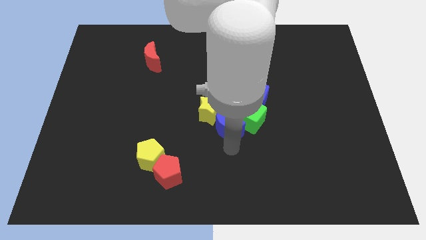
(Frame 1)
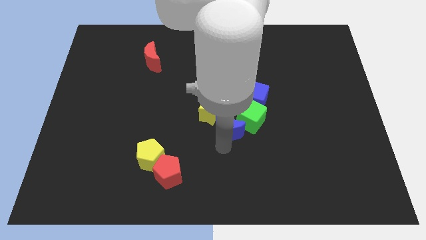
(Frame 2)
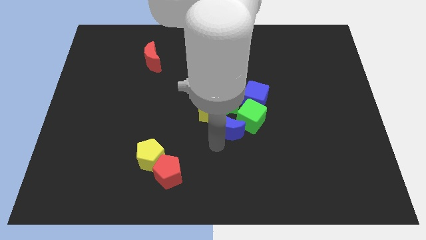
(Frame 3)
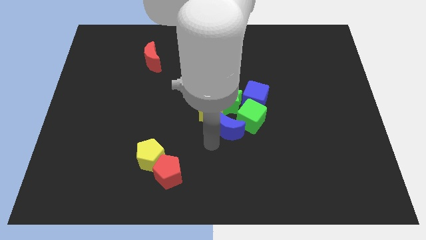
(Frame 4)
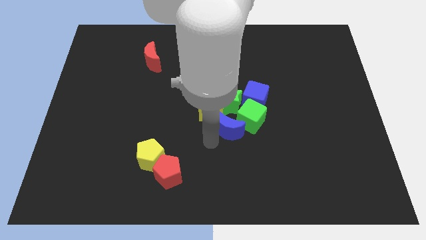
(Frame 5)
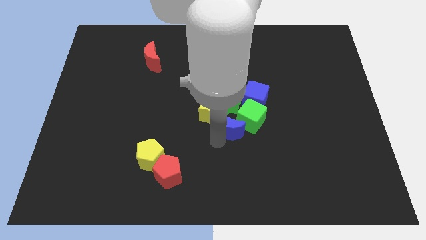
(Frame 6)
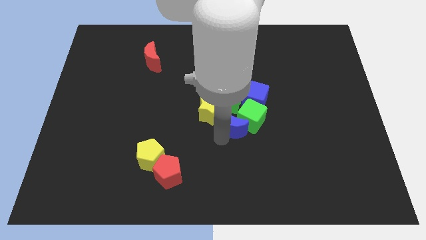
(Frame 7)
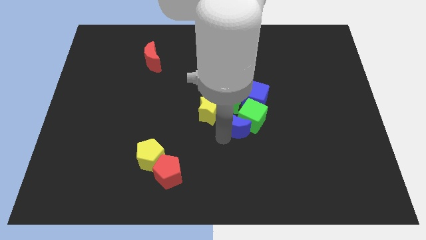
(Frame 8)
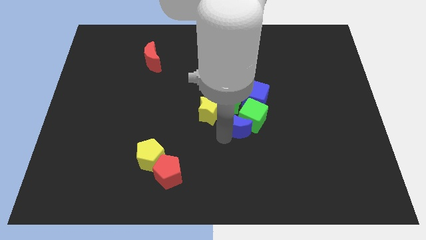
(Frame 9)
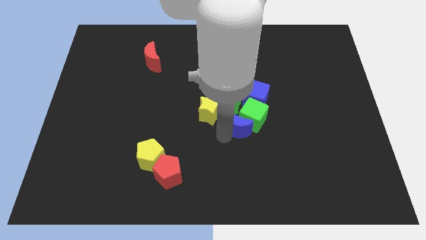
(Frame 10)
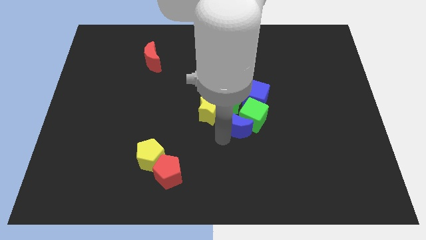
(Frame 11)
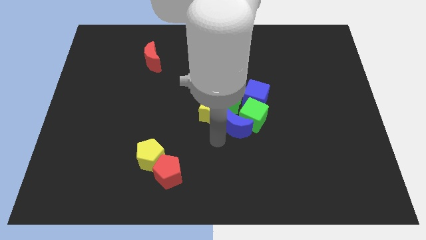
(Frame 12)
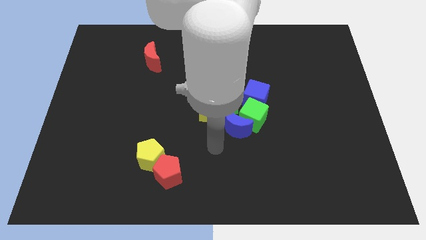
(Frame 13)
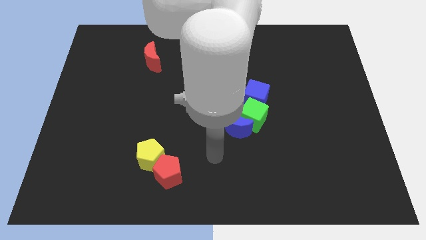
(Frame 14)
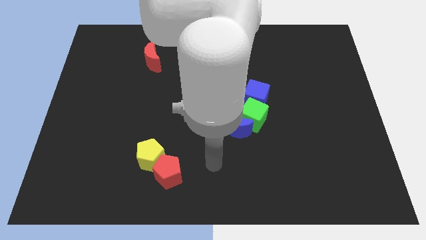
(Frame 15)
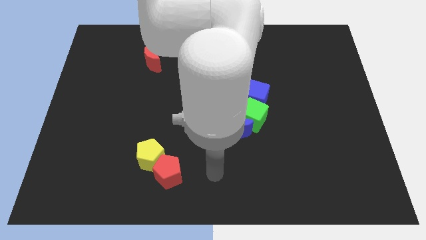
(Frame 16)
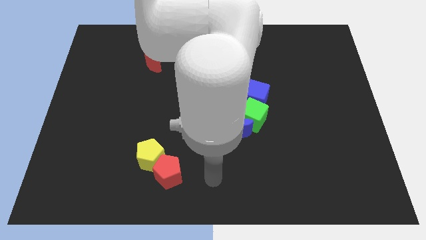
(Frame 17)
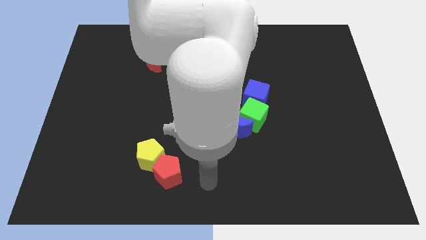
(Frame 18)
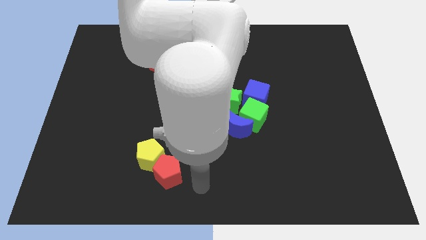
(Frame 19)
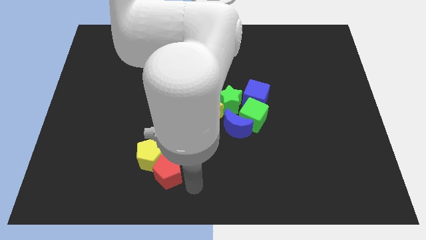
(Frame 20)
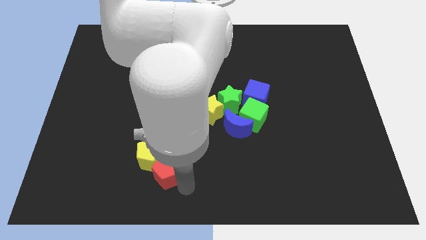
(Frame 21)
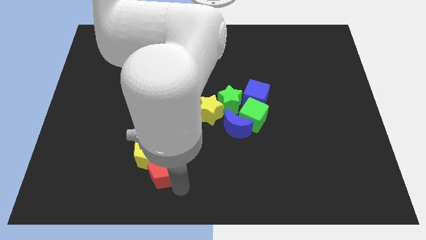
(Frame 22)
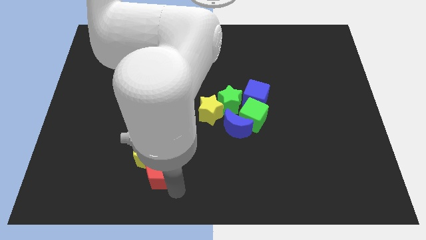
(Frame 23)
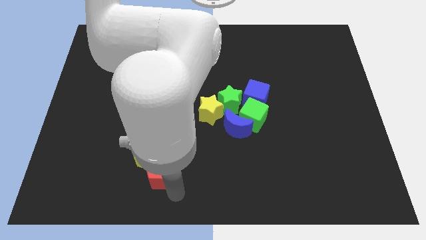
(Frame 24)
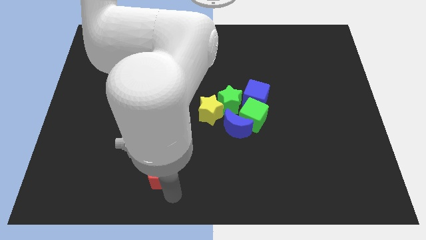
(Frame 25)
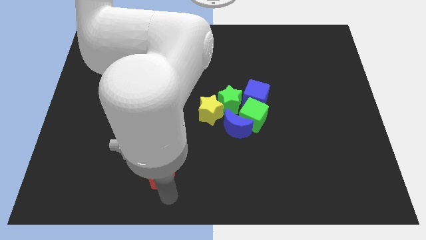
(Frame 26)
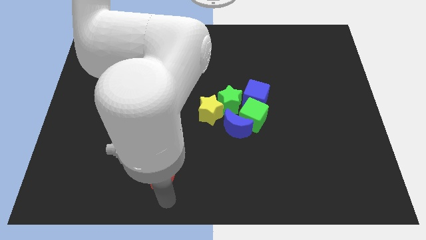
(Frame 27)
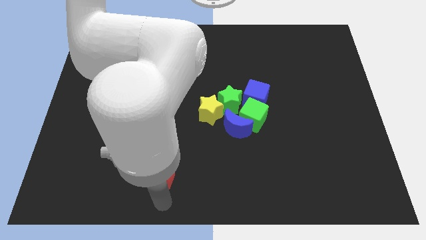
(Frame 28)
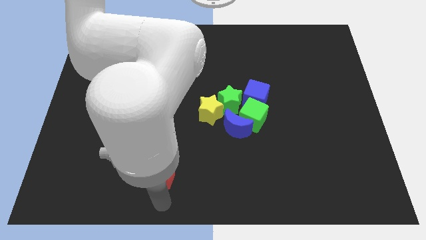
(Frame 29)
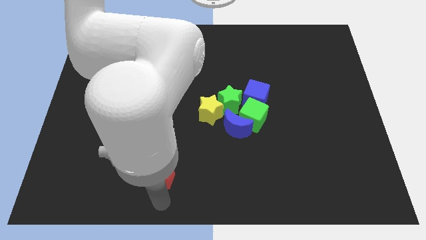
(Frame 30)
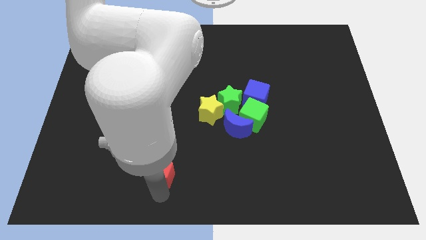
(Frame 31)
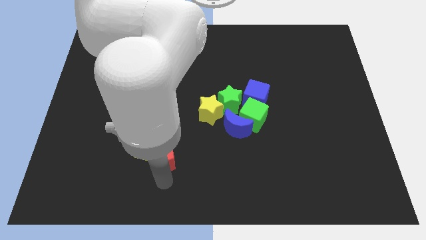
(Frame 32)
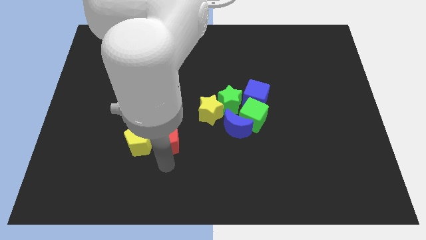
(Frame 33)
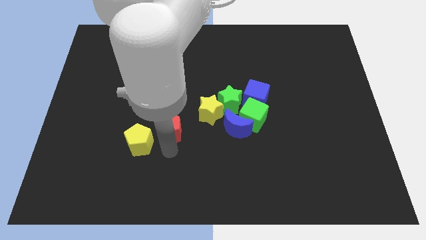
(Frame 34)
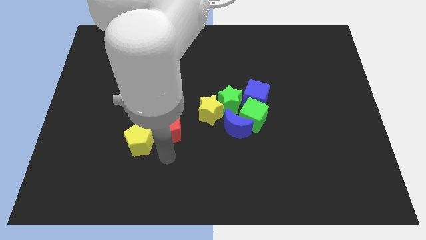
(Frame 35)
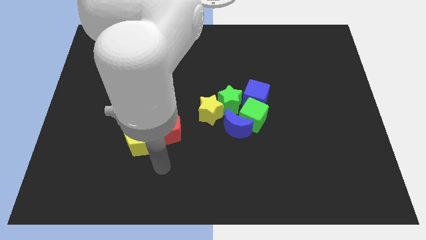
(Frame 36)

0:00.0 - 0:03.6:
separate the red pentagon from the yellow pentagon

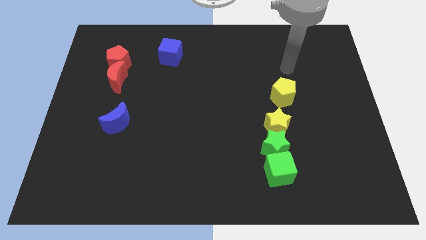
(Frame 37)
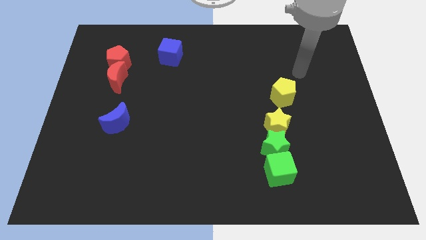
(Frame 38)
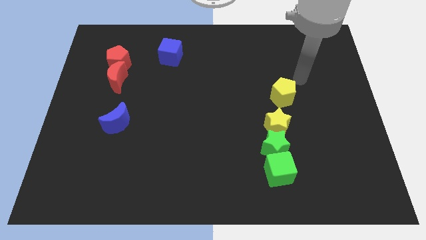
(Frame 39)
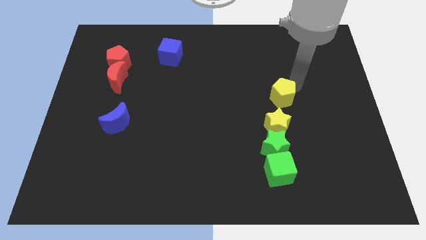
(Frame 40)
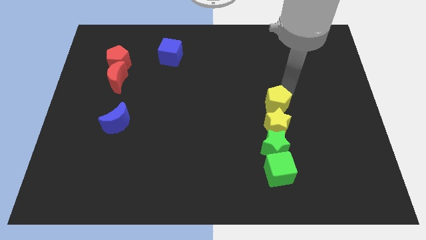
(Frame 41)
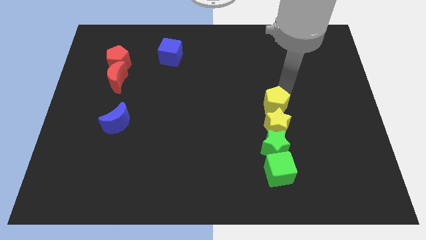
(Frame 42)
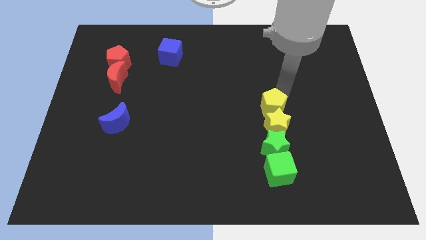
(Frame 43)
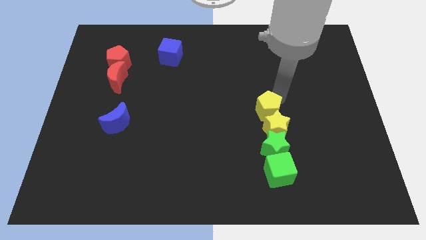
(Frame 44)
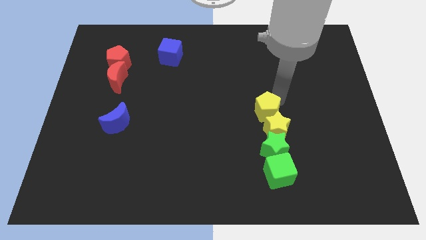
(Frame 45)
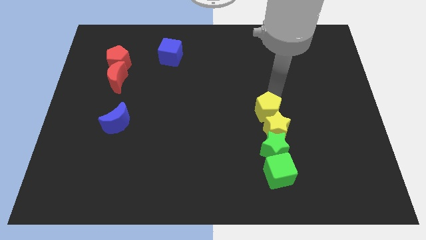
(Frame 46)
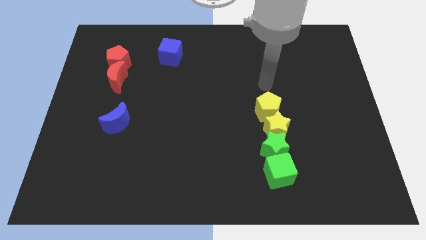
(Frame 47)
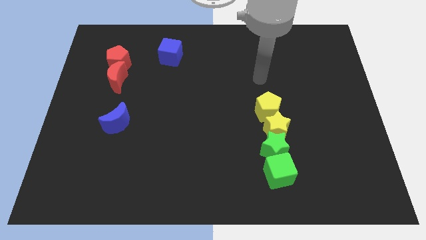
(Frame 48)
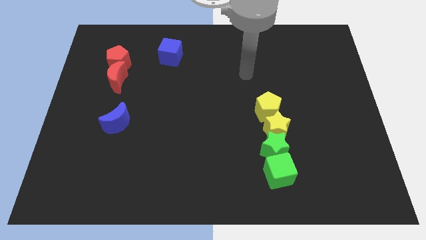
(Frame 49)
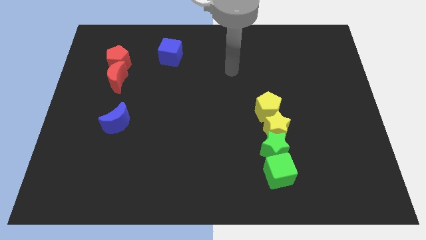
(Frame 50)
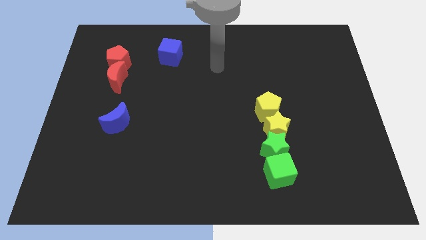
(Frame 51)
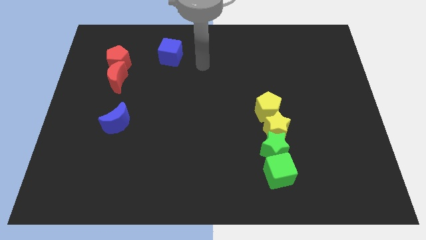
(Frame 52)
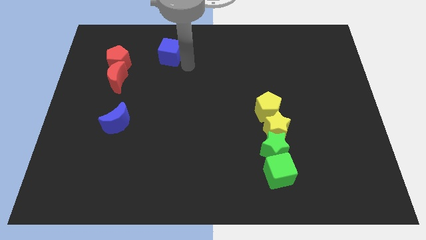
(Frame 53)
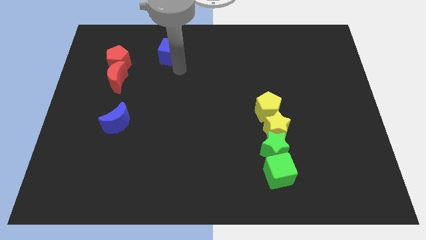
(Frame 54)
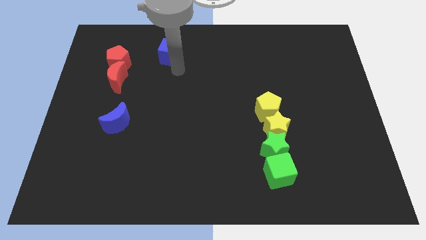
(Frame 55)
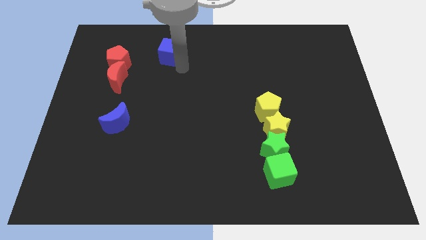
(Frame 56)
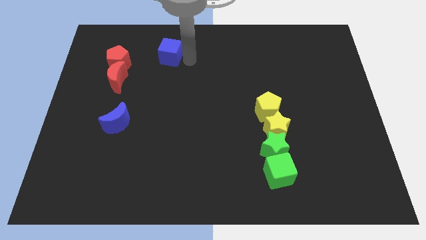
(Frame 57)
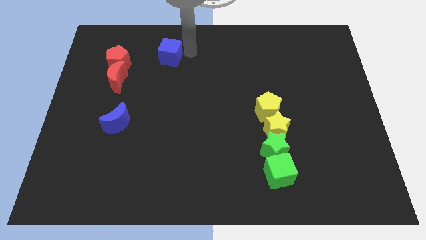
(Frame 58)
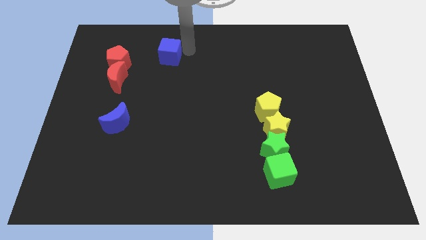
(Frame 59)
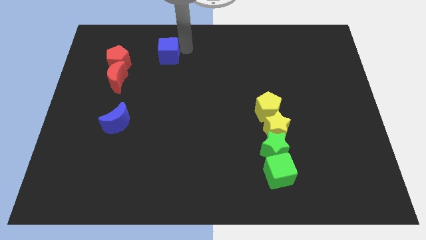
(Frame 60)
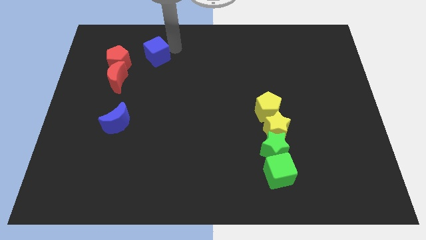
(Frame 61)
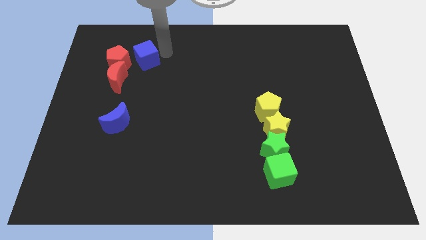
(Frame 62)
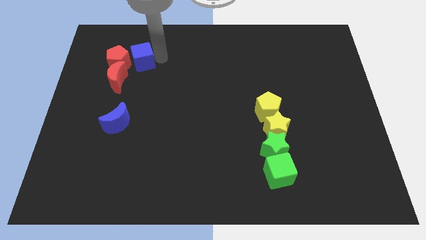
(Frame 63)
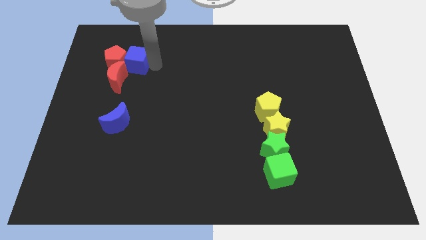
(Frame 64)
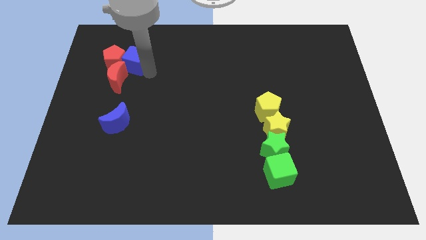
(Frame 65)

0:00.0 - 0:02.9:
place the blue cube right to the red pentagon

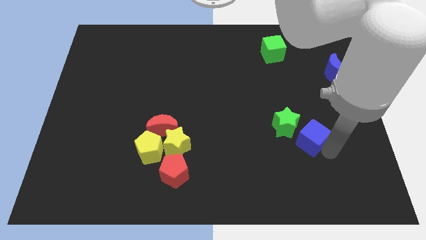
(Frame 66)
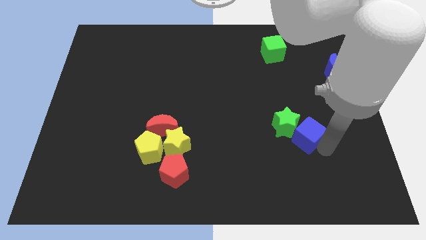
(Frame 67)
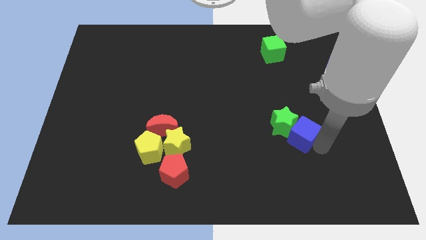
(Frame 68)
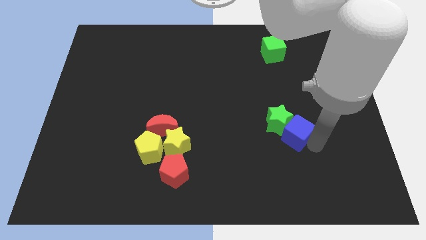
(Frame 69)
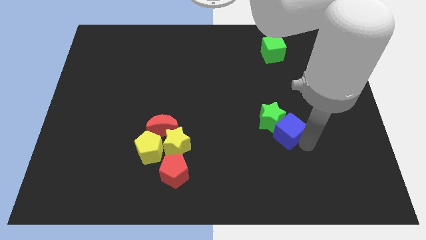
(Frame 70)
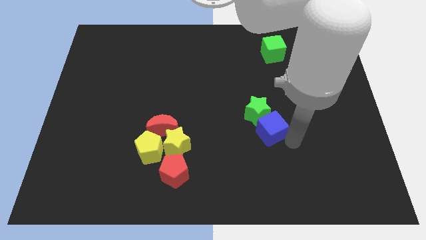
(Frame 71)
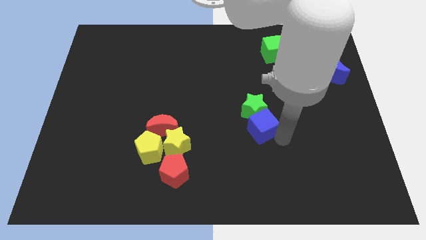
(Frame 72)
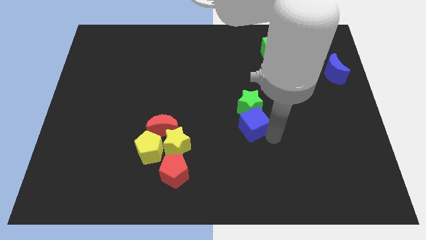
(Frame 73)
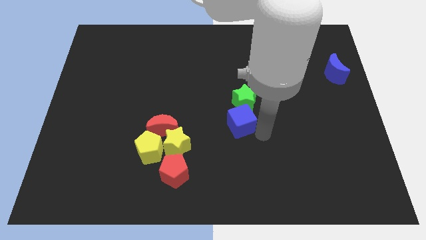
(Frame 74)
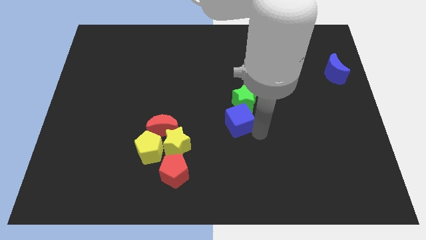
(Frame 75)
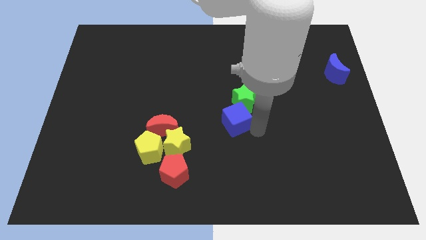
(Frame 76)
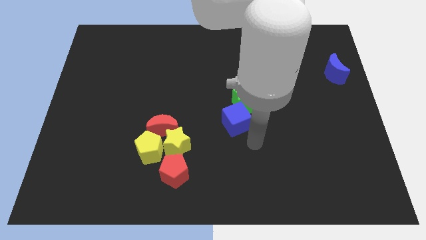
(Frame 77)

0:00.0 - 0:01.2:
push green star with blue cube

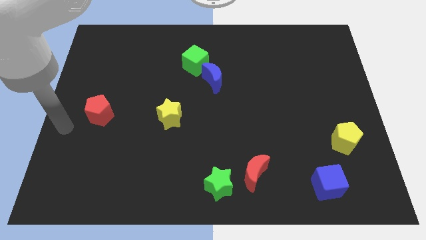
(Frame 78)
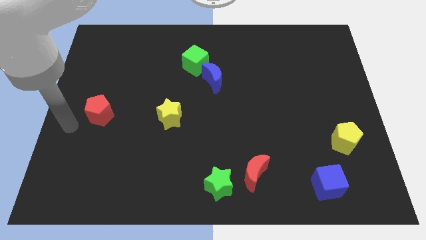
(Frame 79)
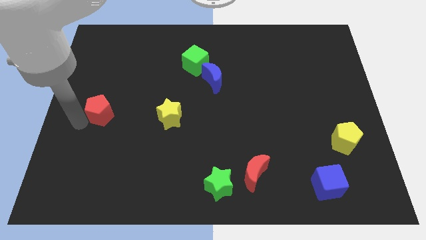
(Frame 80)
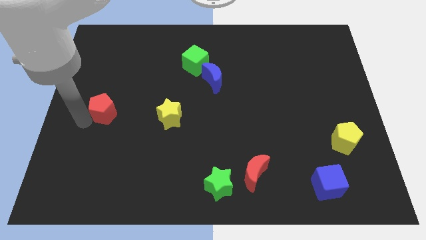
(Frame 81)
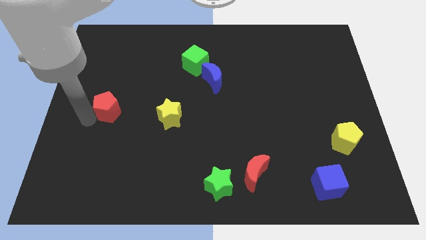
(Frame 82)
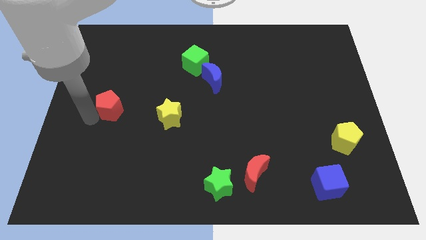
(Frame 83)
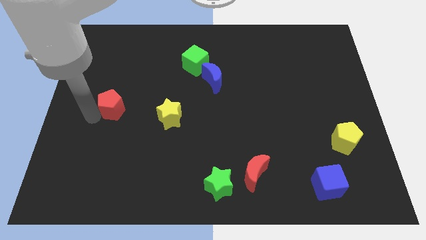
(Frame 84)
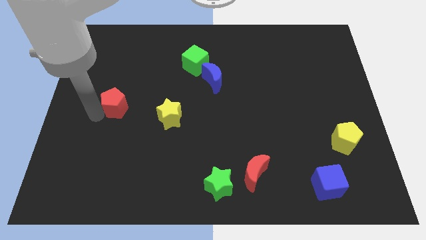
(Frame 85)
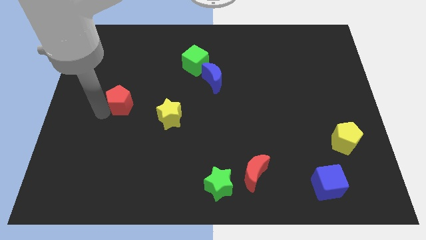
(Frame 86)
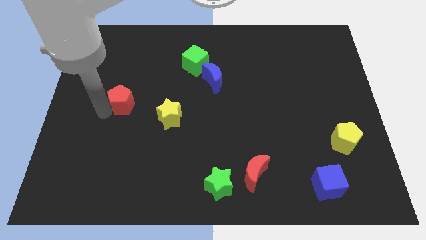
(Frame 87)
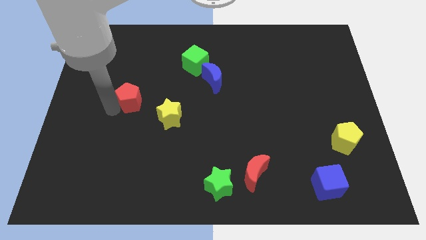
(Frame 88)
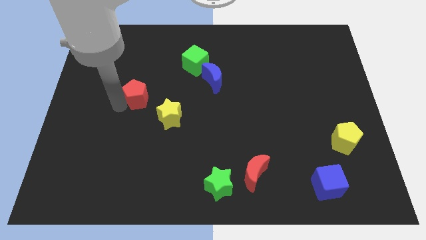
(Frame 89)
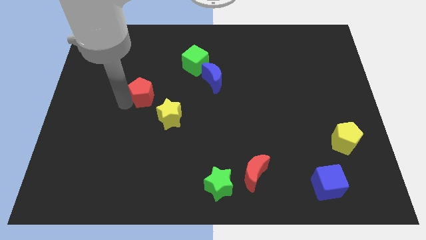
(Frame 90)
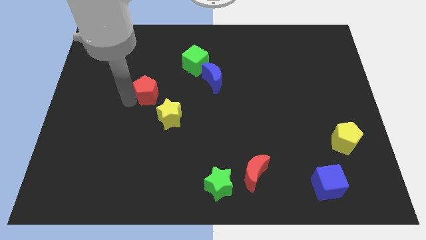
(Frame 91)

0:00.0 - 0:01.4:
move the red pentagon diagonal to the yellow star
